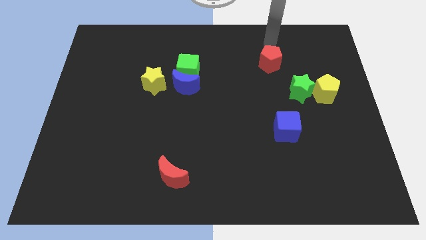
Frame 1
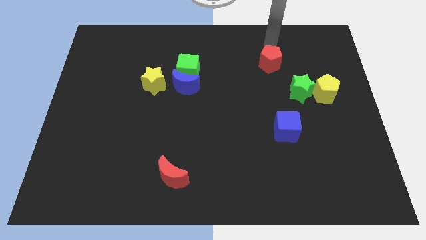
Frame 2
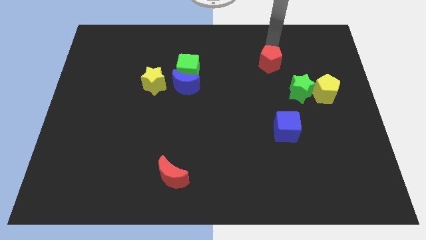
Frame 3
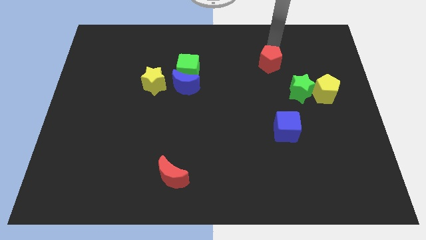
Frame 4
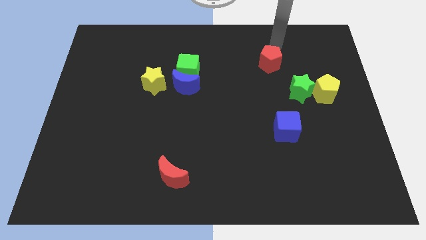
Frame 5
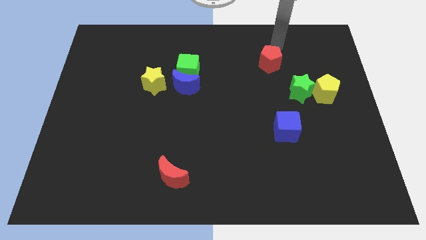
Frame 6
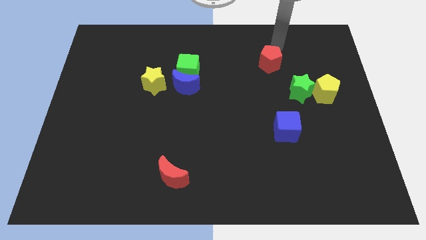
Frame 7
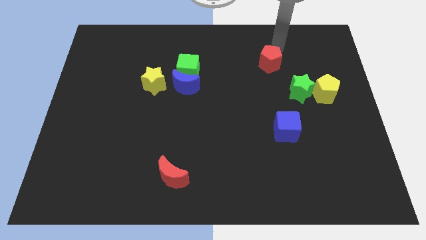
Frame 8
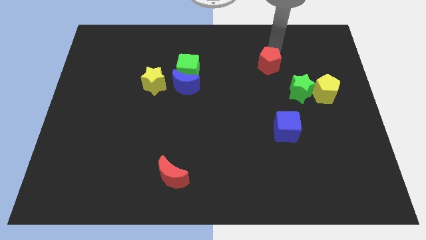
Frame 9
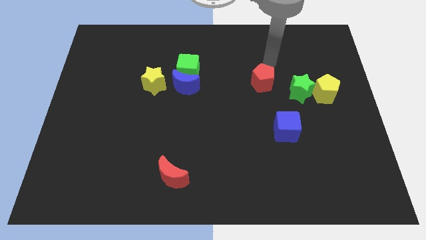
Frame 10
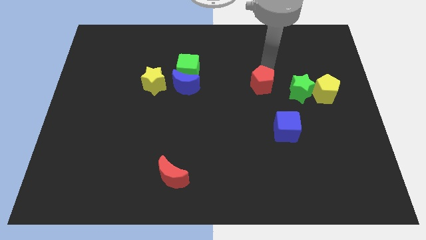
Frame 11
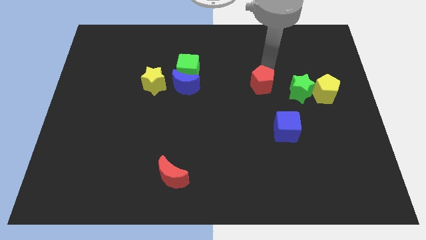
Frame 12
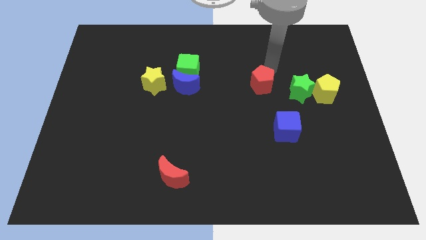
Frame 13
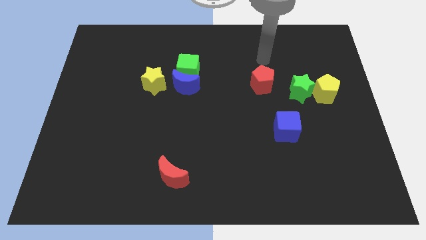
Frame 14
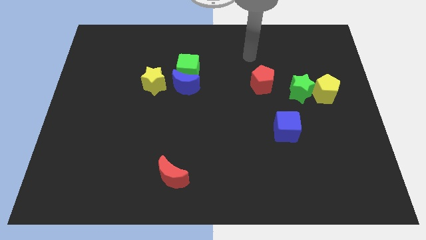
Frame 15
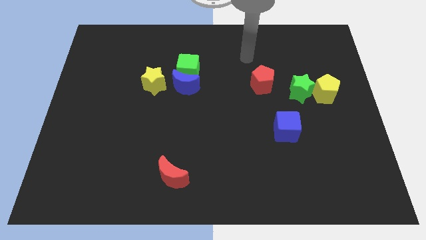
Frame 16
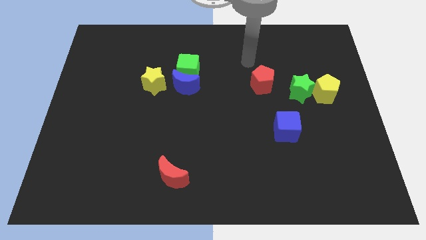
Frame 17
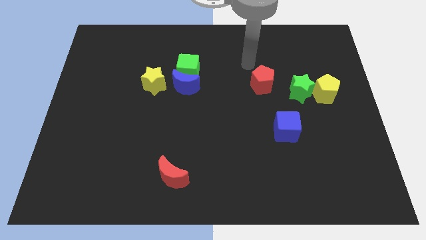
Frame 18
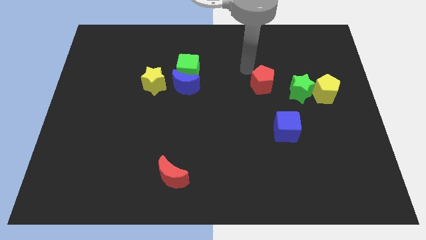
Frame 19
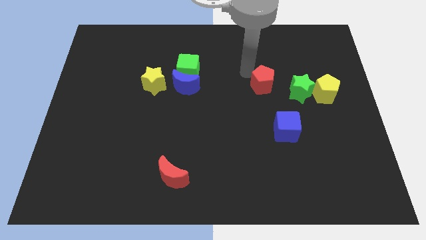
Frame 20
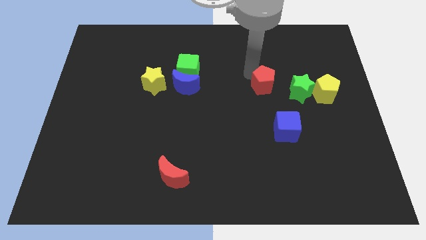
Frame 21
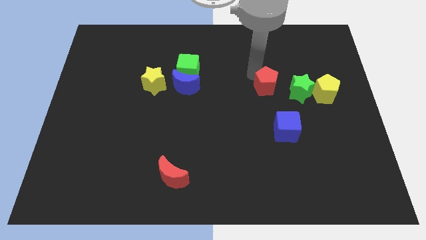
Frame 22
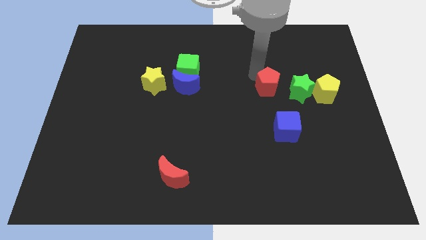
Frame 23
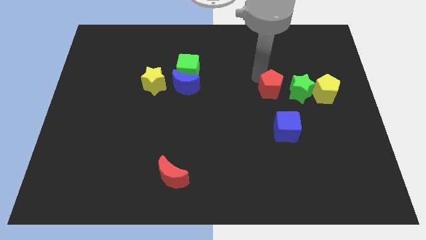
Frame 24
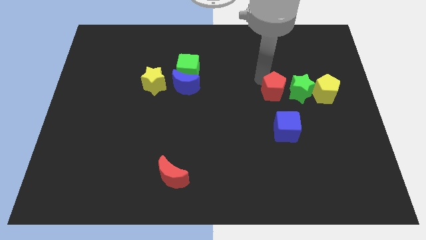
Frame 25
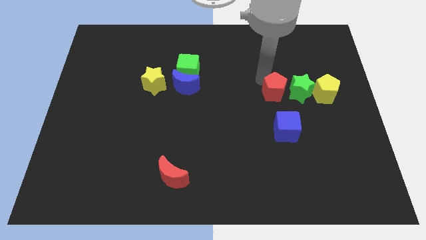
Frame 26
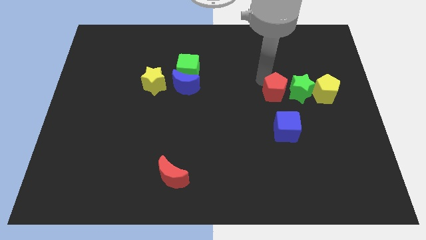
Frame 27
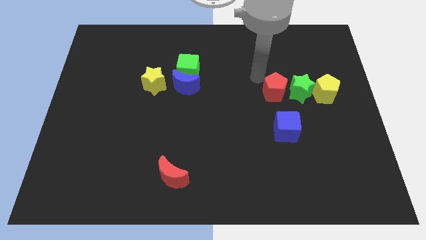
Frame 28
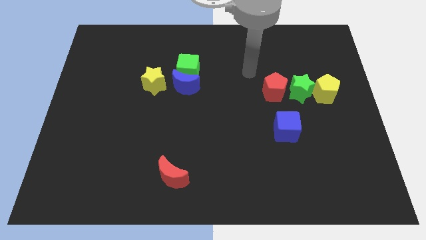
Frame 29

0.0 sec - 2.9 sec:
place the red pentagon close to the green star

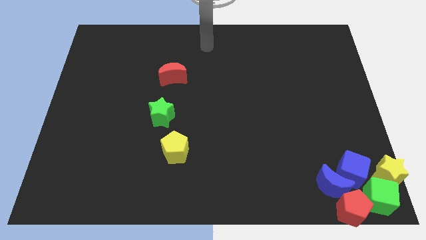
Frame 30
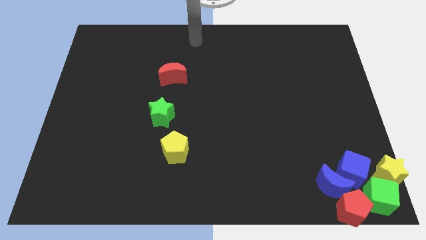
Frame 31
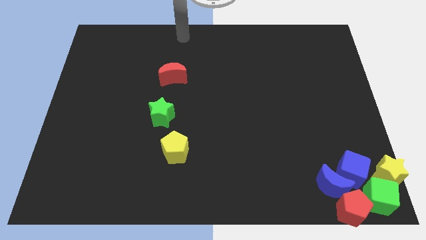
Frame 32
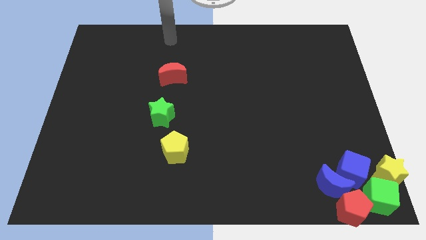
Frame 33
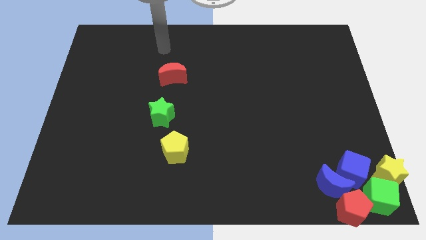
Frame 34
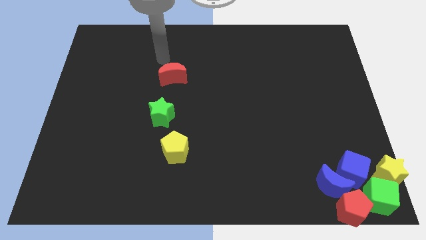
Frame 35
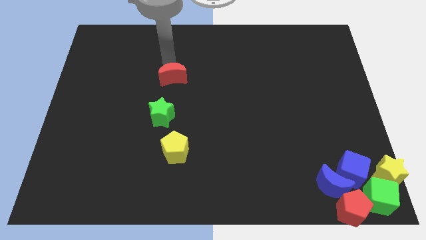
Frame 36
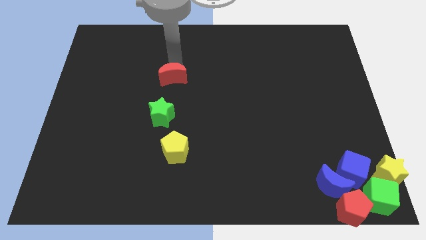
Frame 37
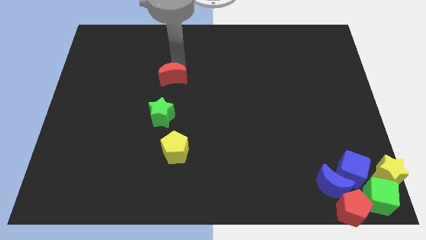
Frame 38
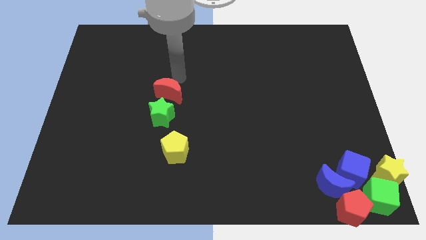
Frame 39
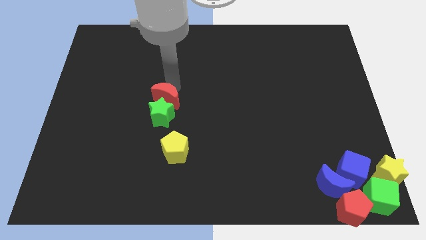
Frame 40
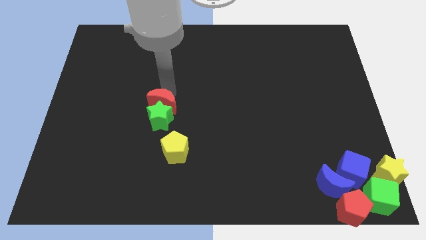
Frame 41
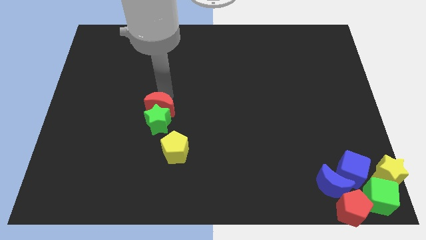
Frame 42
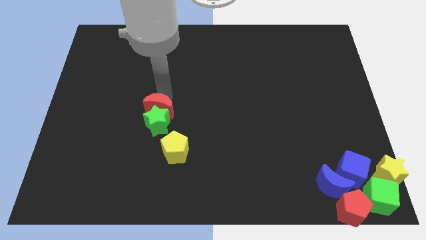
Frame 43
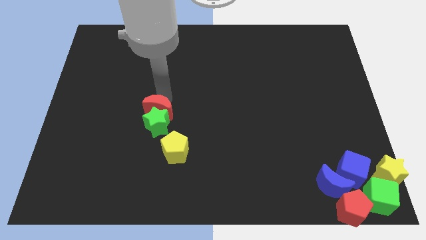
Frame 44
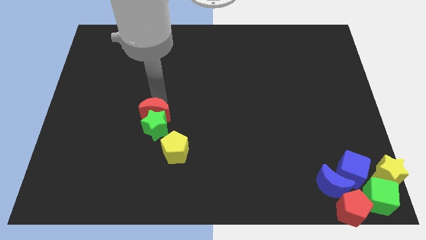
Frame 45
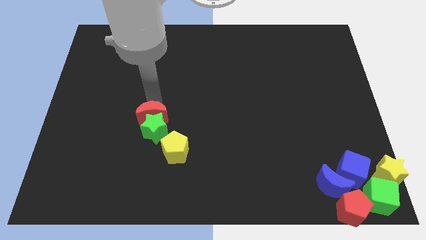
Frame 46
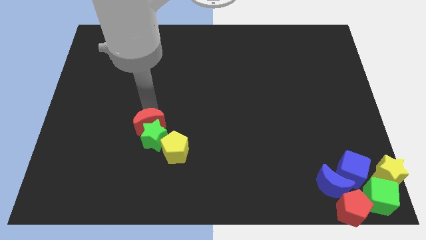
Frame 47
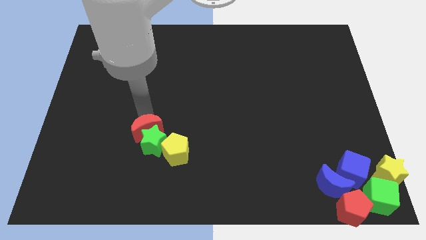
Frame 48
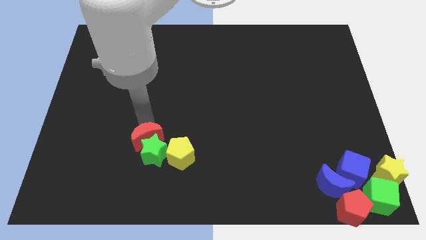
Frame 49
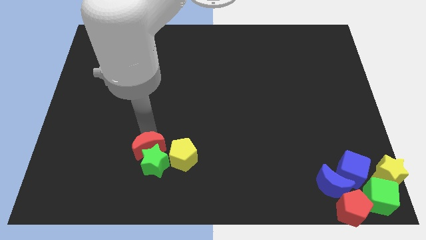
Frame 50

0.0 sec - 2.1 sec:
push the red moon into the green star

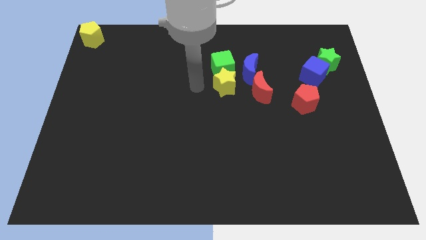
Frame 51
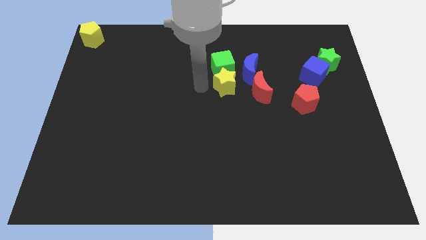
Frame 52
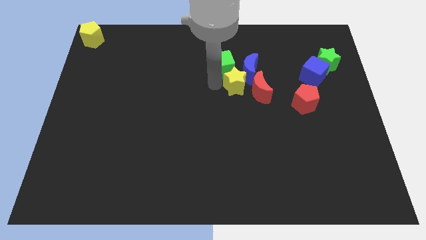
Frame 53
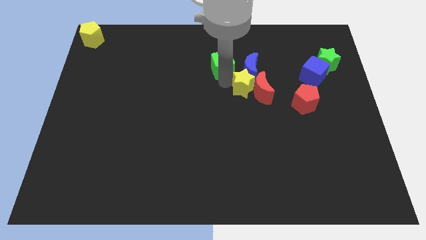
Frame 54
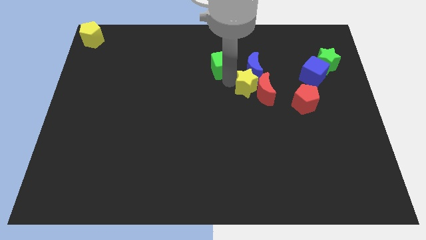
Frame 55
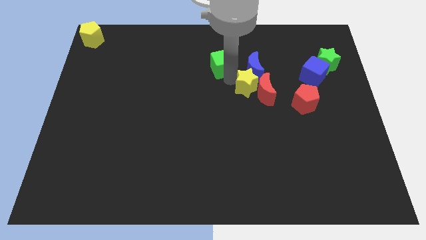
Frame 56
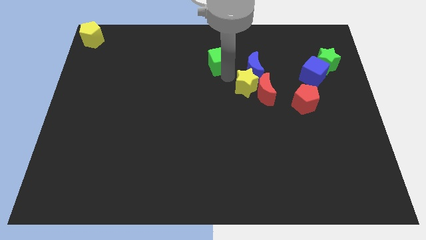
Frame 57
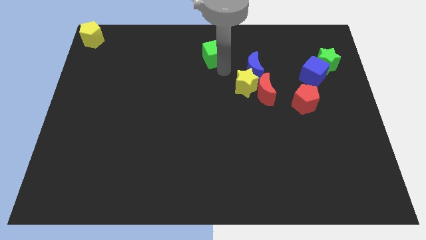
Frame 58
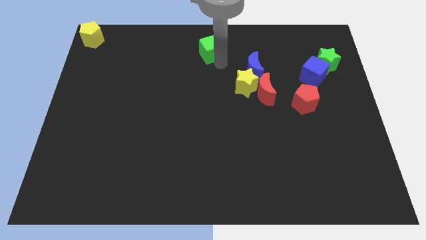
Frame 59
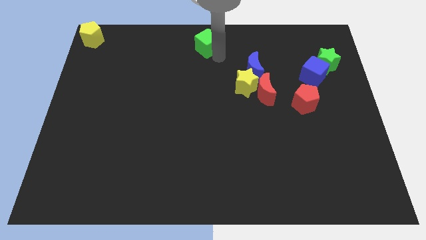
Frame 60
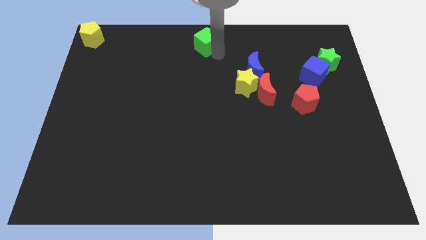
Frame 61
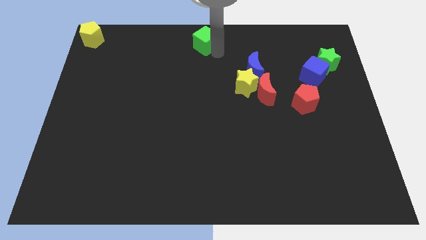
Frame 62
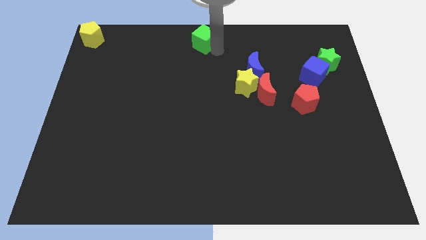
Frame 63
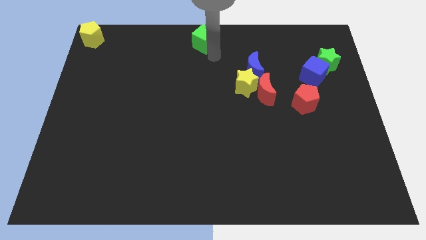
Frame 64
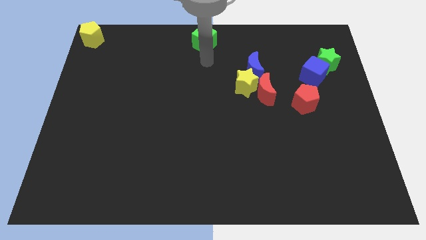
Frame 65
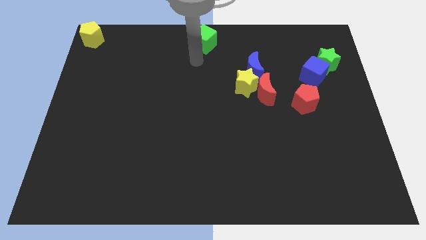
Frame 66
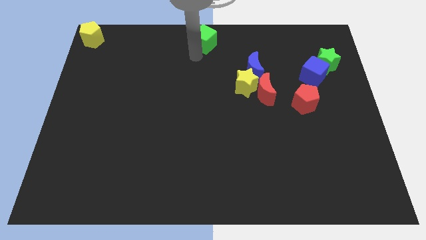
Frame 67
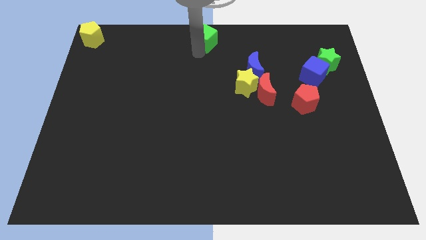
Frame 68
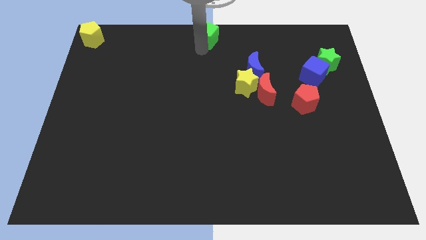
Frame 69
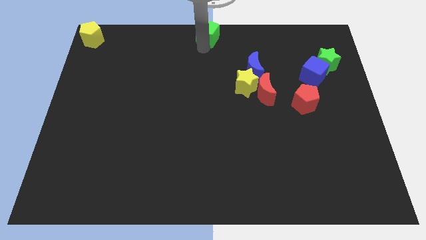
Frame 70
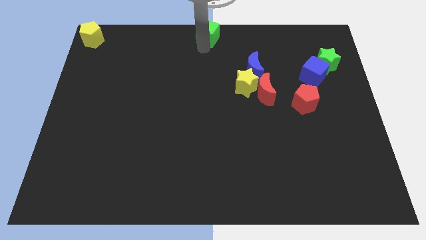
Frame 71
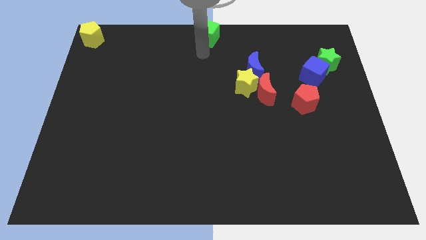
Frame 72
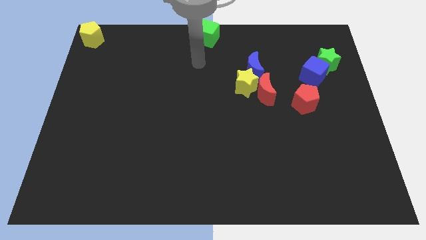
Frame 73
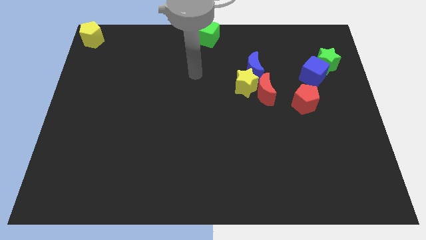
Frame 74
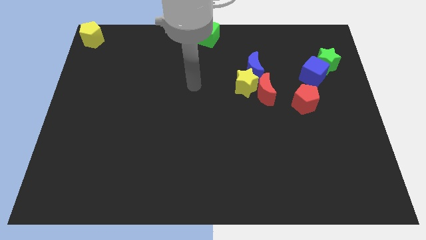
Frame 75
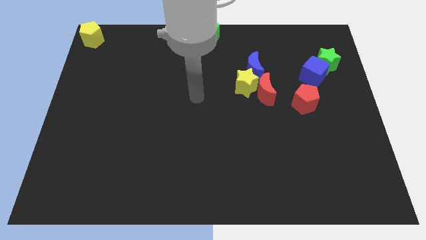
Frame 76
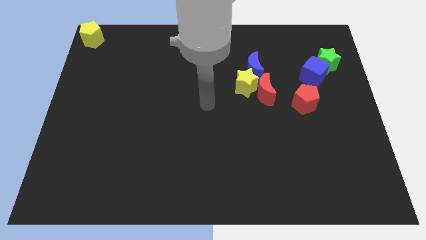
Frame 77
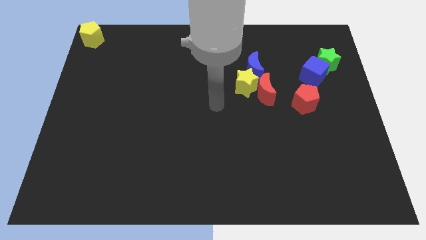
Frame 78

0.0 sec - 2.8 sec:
move the green cube to the top center of the board

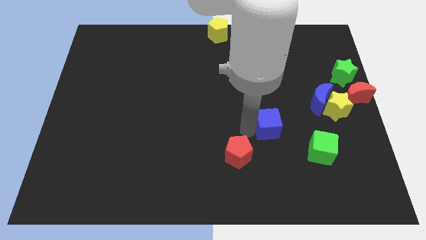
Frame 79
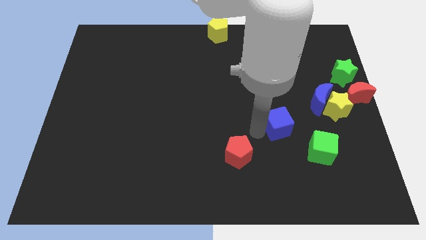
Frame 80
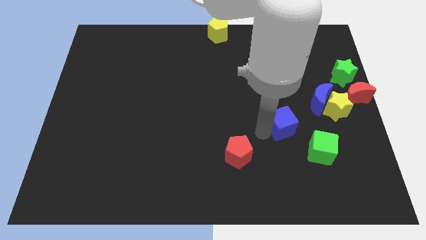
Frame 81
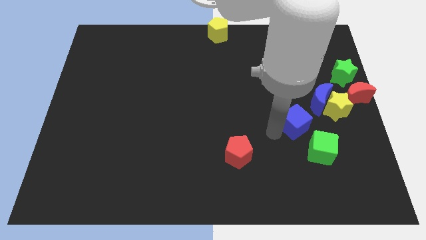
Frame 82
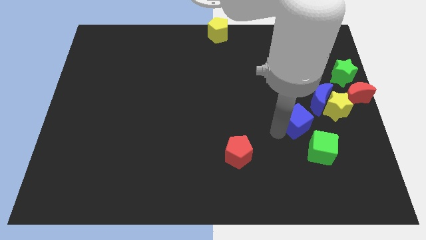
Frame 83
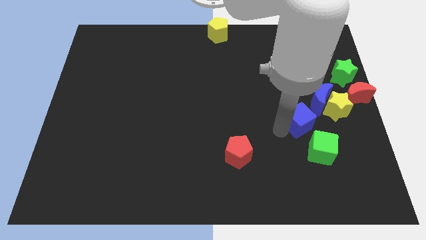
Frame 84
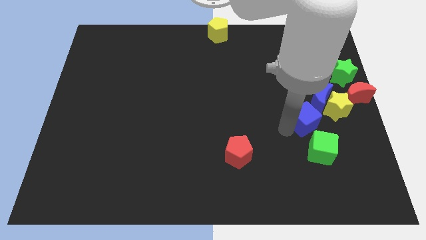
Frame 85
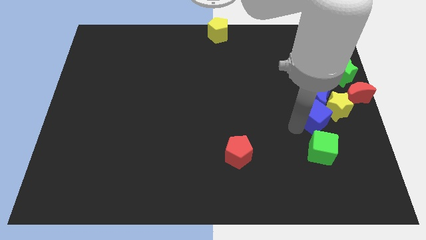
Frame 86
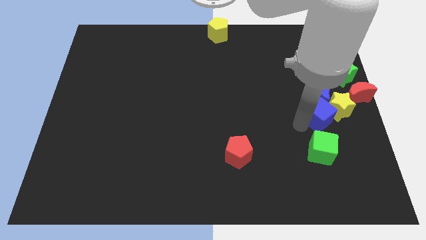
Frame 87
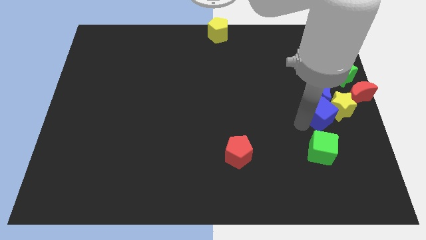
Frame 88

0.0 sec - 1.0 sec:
push blue cube into the group of blocks
